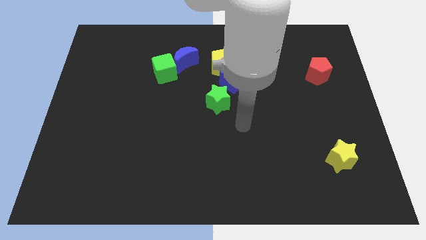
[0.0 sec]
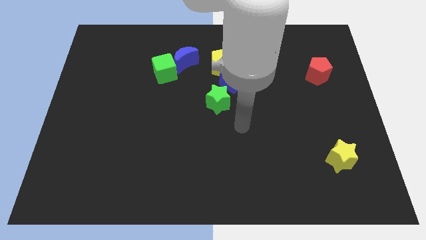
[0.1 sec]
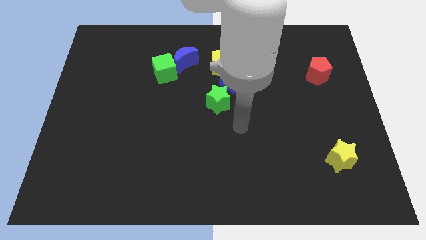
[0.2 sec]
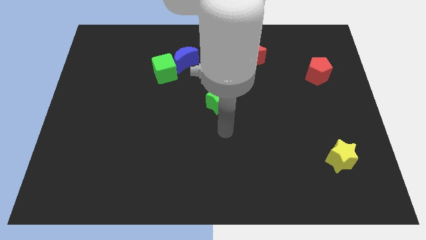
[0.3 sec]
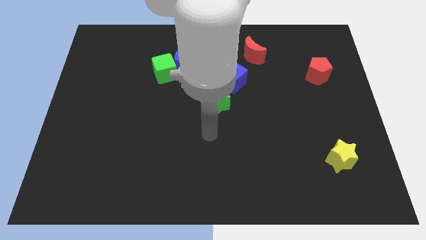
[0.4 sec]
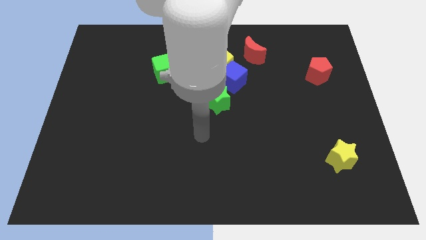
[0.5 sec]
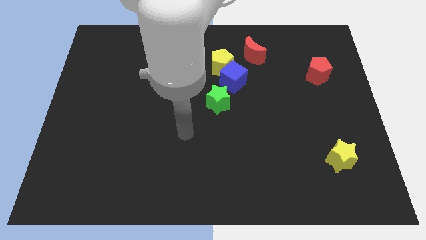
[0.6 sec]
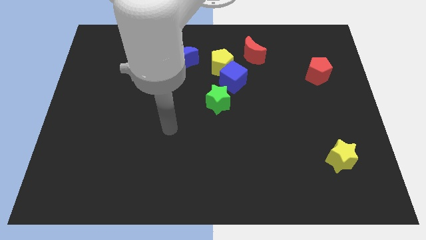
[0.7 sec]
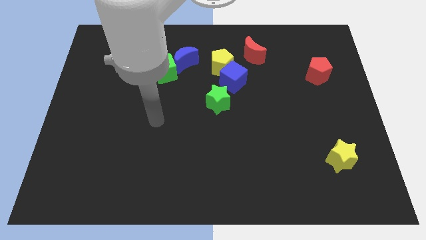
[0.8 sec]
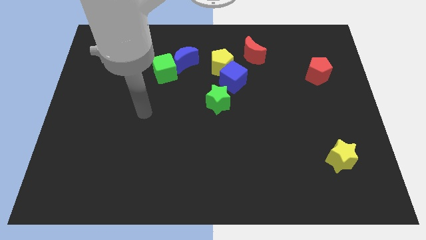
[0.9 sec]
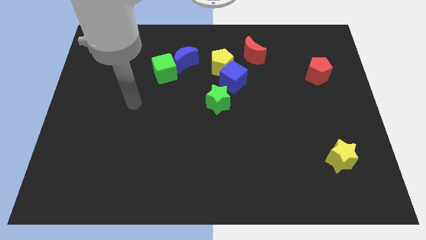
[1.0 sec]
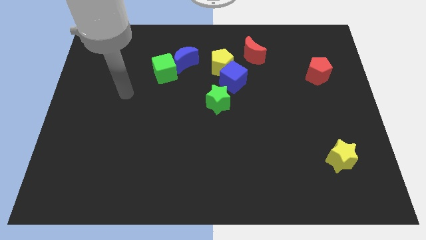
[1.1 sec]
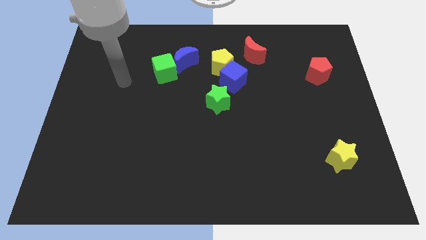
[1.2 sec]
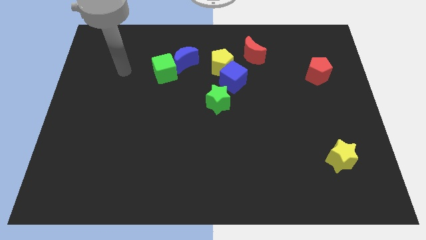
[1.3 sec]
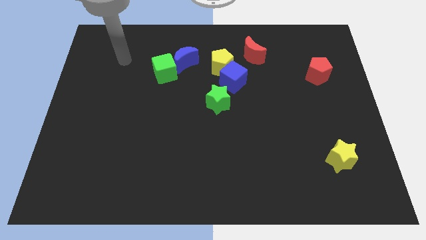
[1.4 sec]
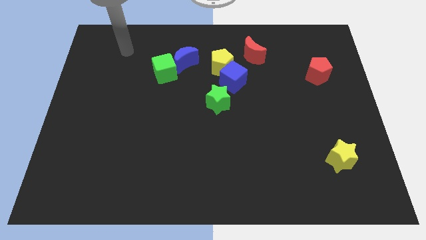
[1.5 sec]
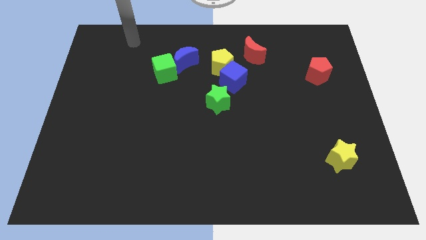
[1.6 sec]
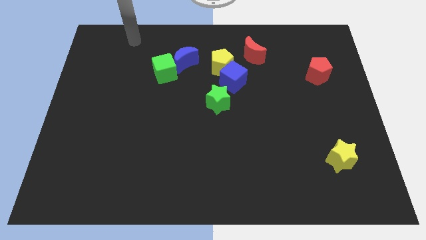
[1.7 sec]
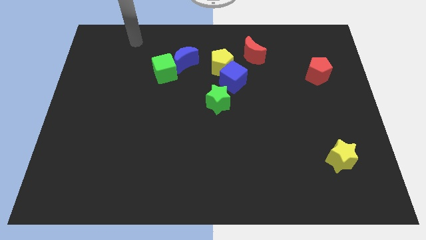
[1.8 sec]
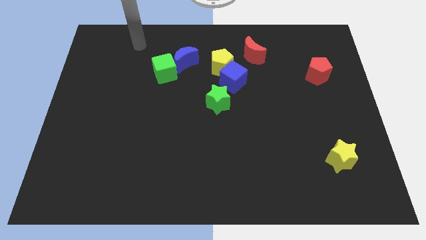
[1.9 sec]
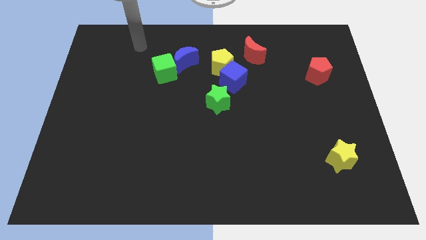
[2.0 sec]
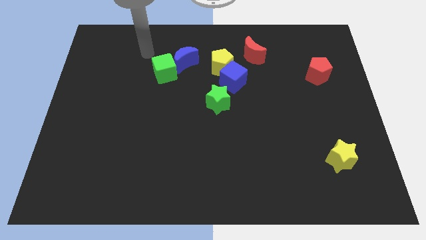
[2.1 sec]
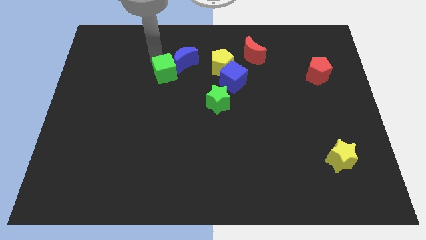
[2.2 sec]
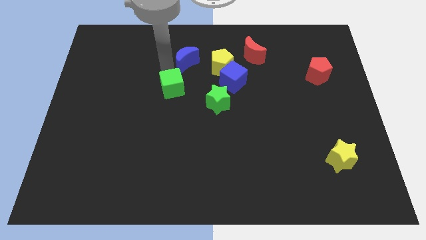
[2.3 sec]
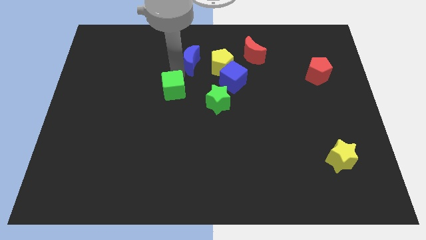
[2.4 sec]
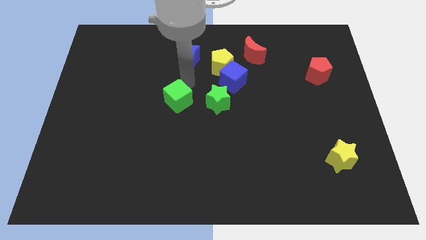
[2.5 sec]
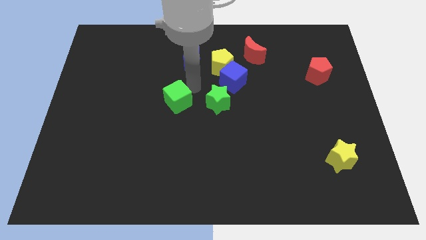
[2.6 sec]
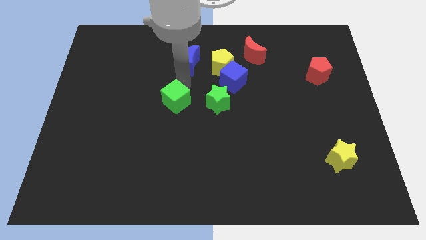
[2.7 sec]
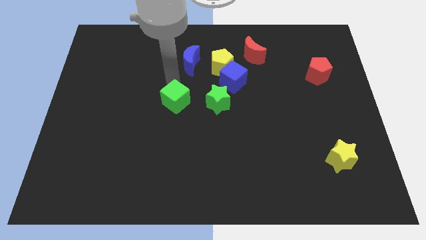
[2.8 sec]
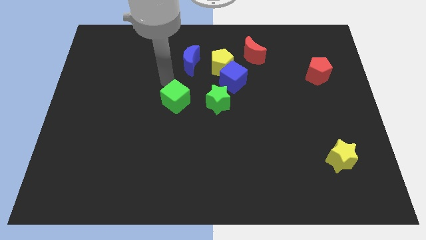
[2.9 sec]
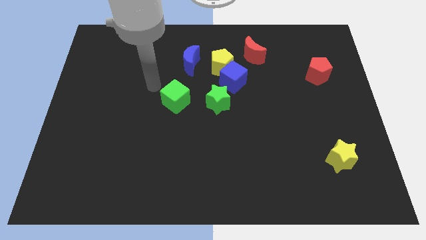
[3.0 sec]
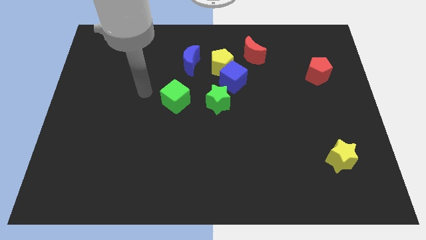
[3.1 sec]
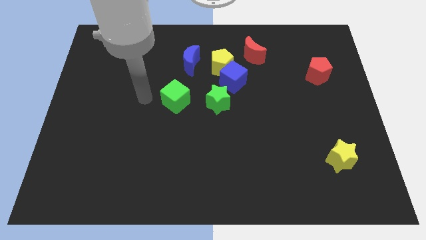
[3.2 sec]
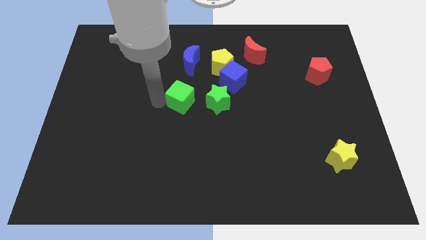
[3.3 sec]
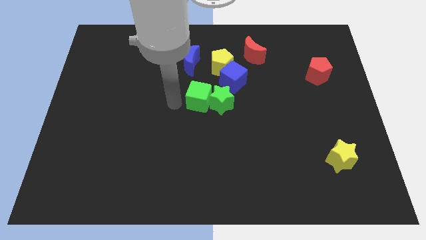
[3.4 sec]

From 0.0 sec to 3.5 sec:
separate the green cube and blue moon

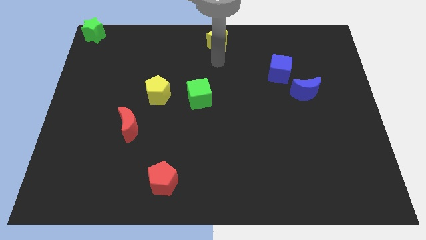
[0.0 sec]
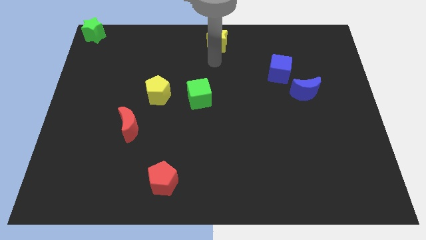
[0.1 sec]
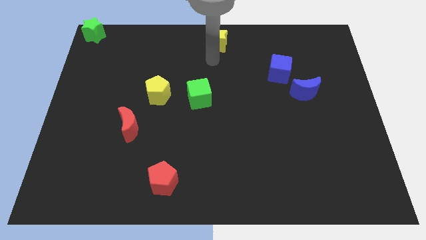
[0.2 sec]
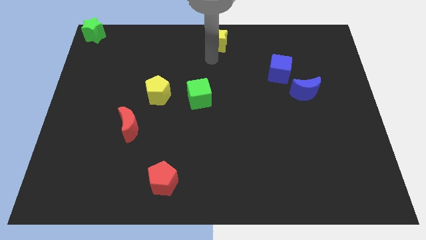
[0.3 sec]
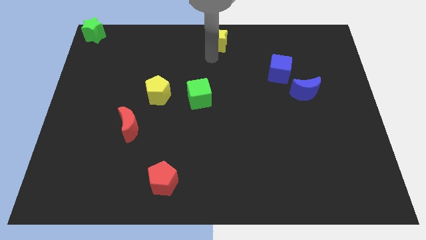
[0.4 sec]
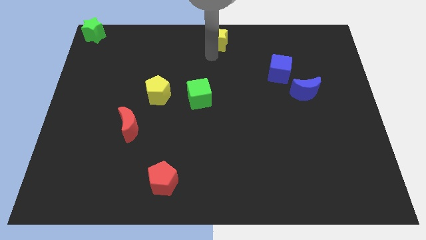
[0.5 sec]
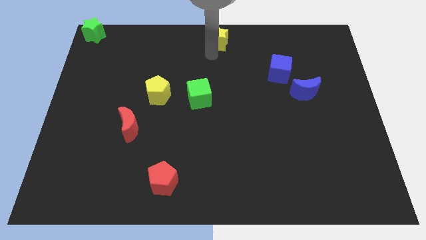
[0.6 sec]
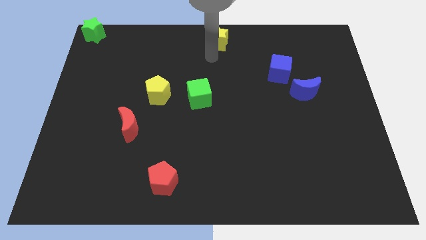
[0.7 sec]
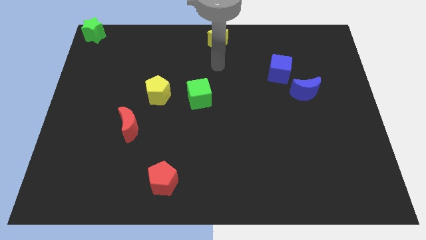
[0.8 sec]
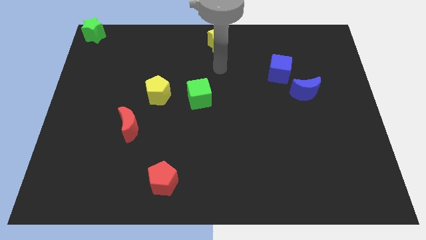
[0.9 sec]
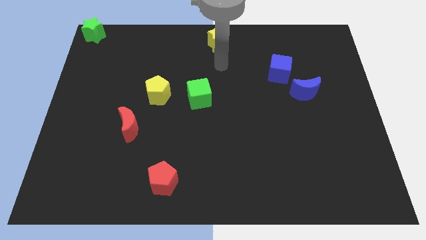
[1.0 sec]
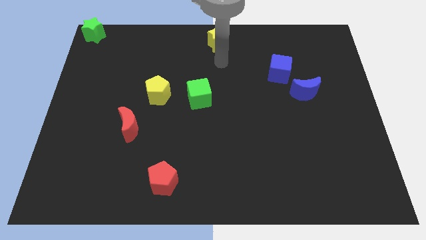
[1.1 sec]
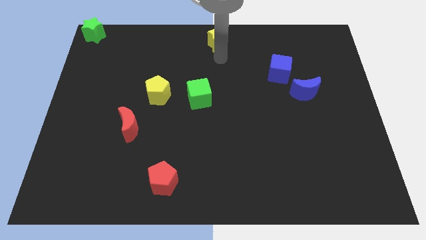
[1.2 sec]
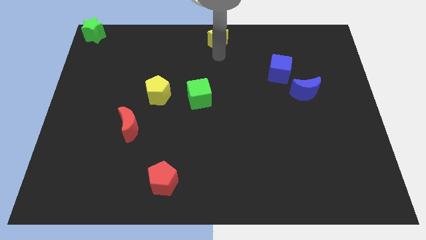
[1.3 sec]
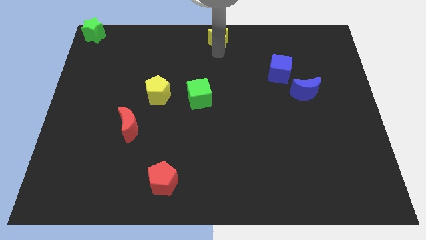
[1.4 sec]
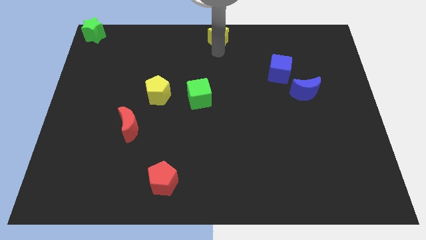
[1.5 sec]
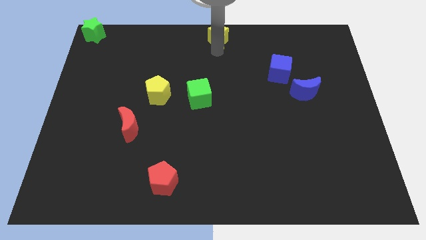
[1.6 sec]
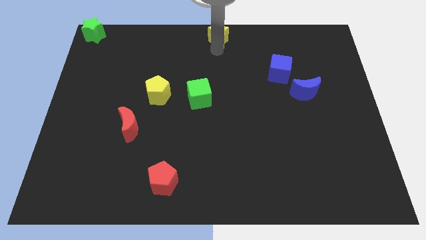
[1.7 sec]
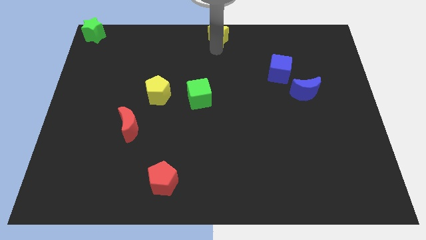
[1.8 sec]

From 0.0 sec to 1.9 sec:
slide the yellow star to the top center of the board

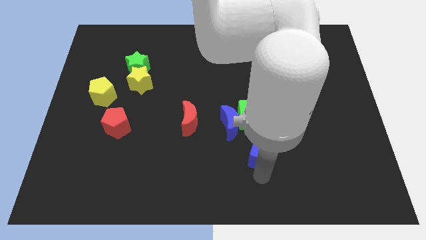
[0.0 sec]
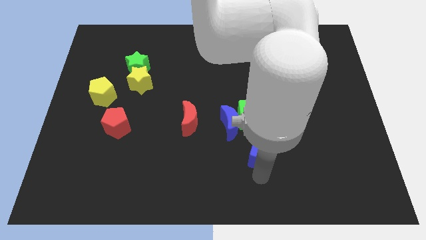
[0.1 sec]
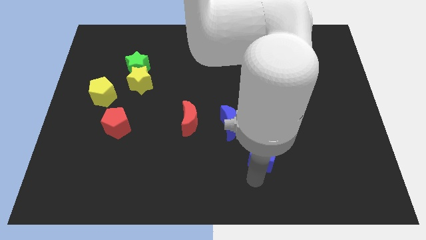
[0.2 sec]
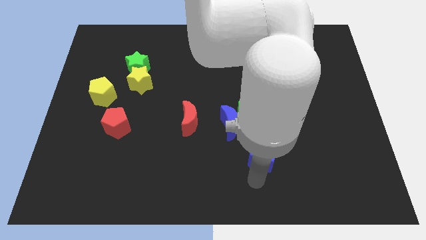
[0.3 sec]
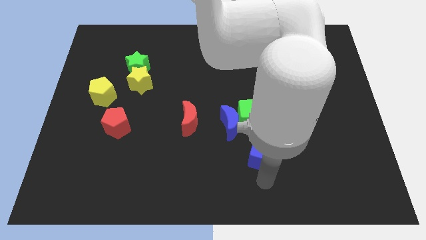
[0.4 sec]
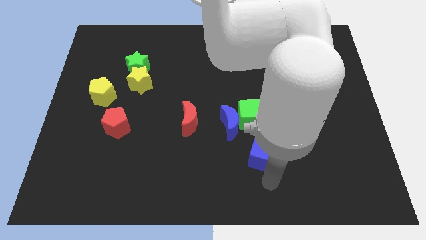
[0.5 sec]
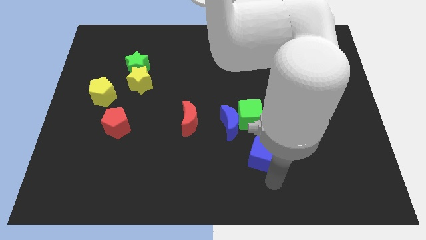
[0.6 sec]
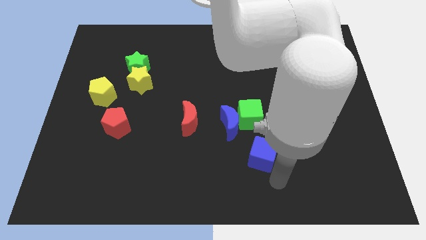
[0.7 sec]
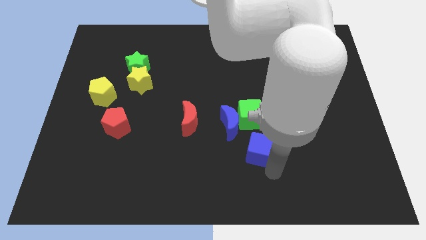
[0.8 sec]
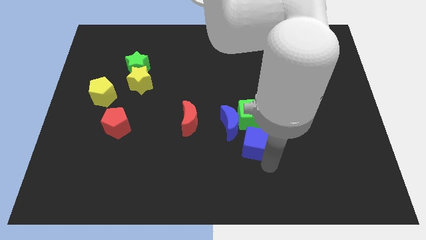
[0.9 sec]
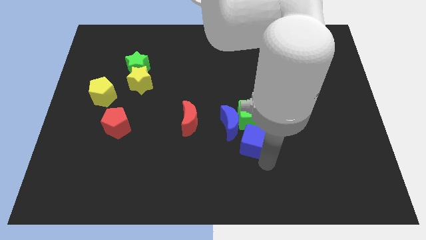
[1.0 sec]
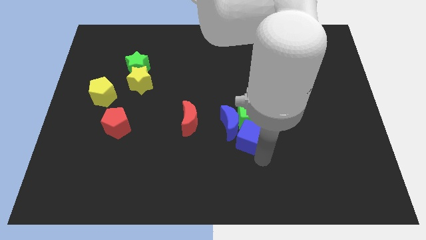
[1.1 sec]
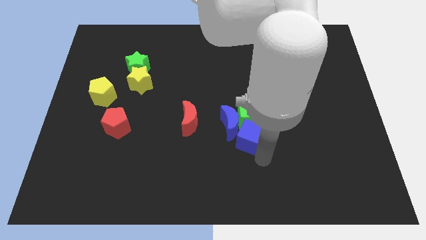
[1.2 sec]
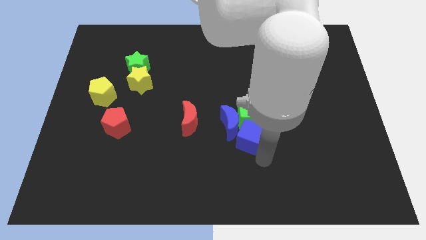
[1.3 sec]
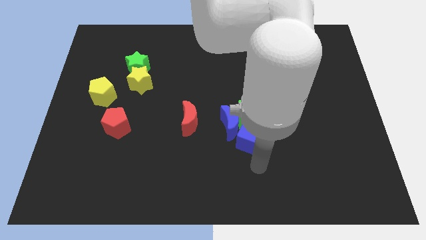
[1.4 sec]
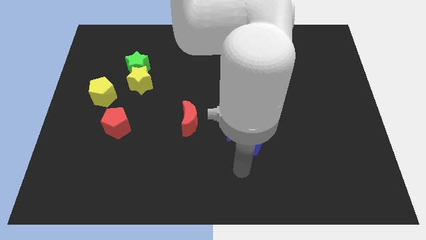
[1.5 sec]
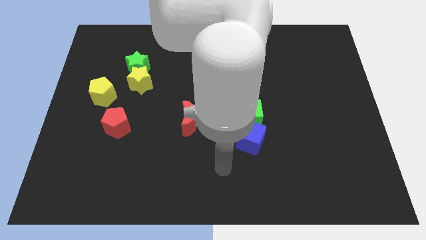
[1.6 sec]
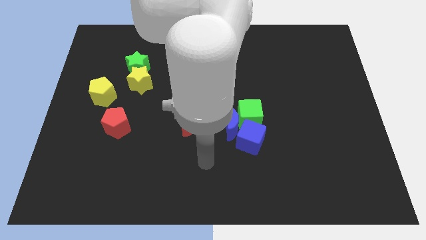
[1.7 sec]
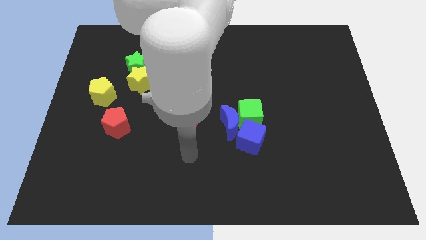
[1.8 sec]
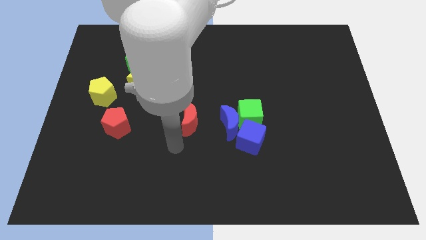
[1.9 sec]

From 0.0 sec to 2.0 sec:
move the blue cube to the bottom of the green cube

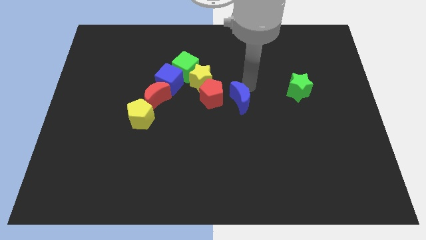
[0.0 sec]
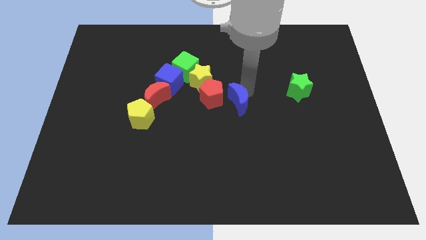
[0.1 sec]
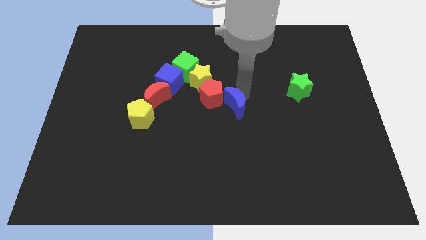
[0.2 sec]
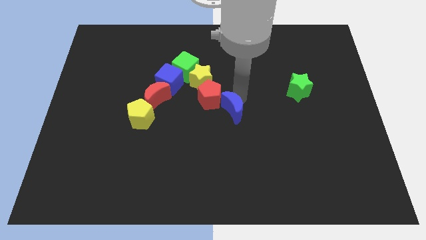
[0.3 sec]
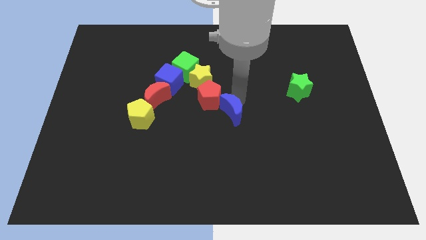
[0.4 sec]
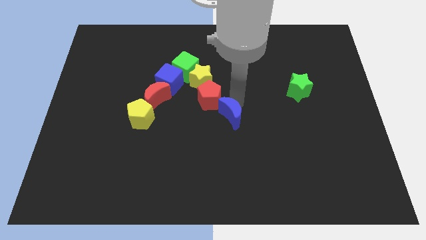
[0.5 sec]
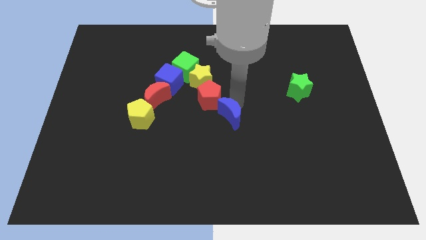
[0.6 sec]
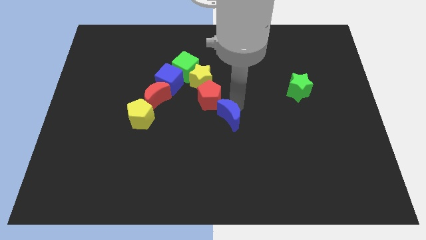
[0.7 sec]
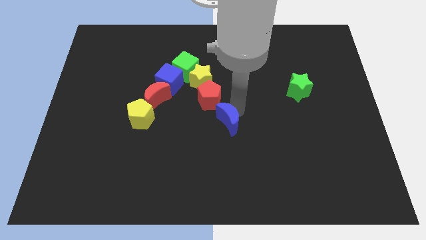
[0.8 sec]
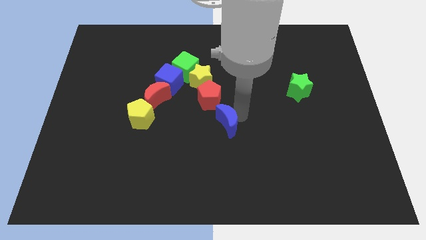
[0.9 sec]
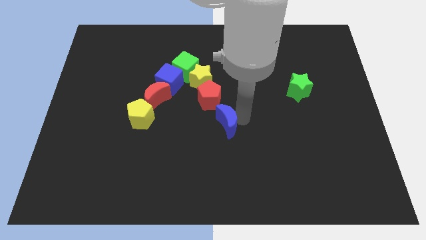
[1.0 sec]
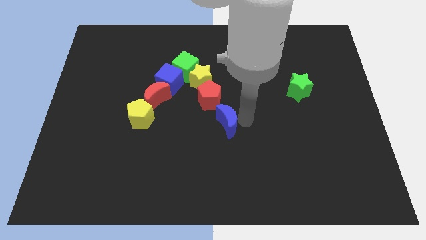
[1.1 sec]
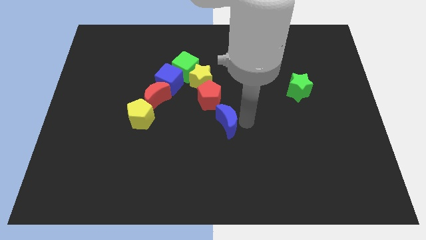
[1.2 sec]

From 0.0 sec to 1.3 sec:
place the blue crescent below the red pentagon to form a diagonal line

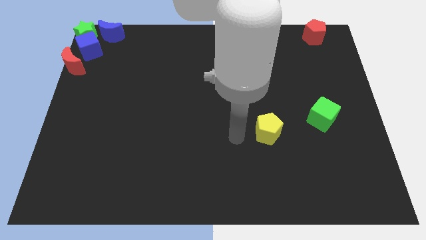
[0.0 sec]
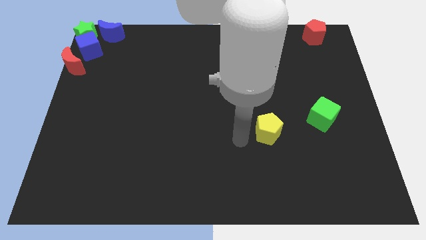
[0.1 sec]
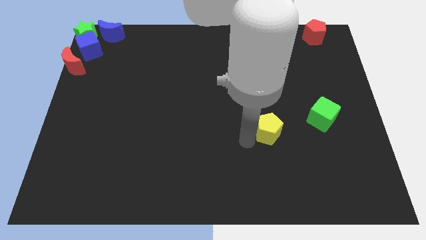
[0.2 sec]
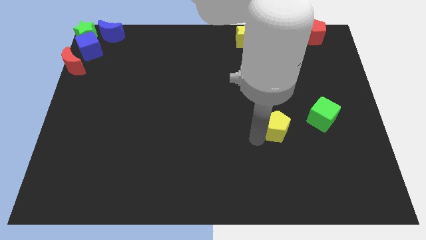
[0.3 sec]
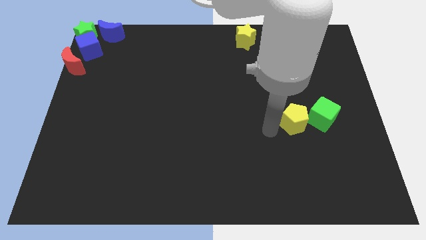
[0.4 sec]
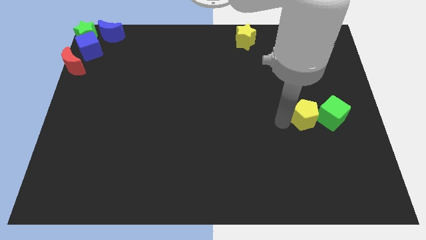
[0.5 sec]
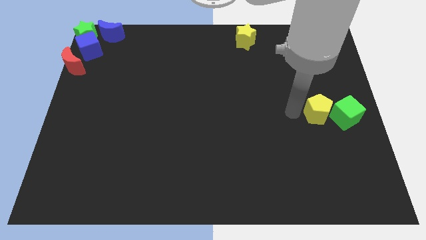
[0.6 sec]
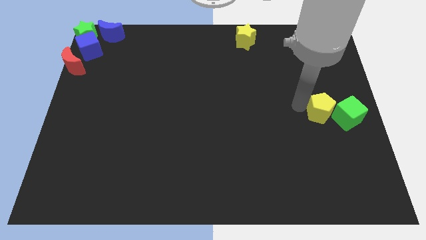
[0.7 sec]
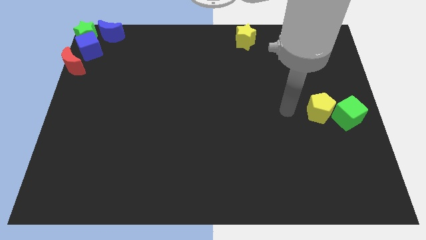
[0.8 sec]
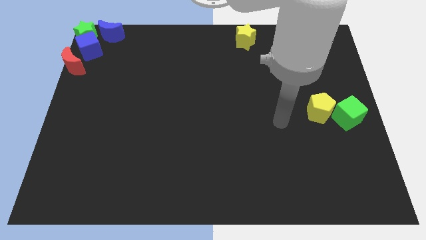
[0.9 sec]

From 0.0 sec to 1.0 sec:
push the yellow pentagon into the green cube
